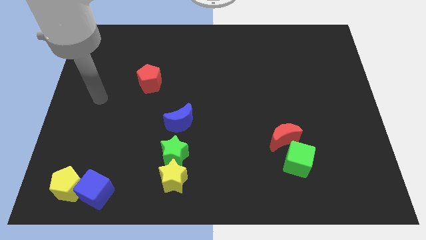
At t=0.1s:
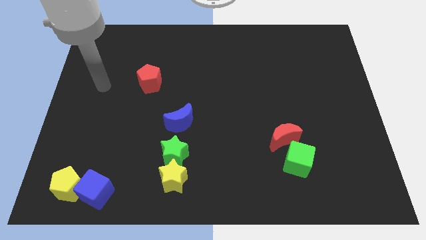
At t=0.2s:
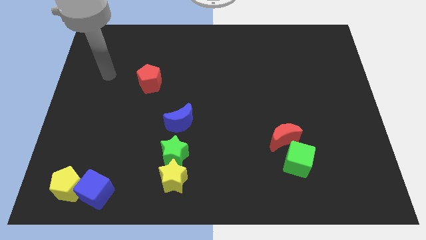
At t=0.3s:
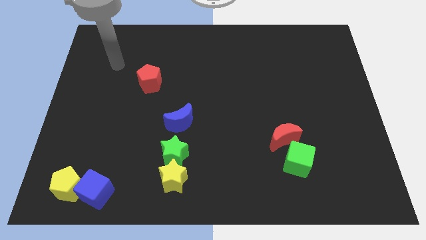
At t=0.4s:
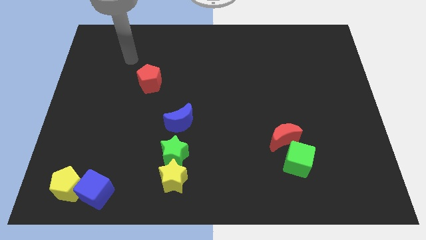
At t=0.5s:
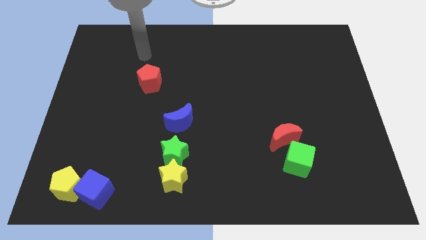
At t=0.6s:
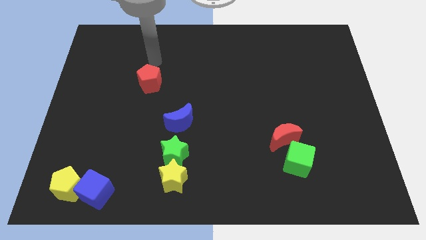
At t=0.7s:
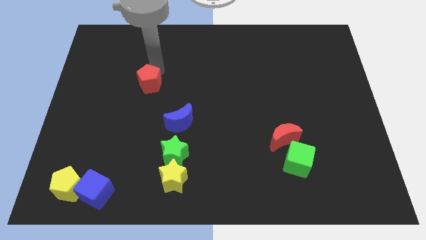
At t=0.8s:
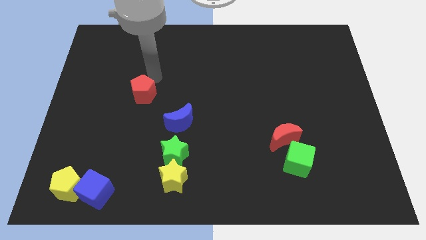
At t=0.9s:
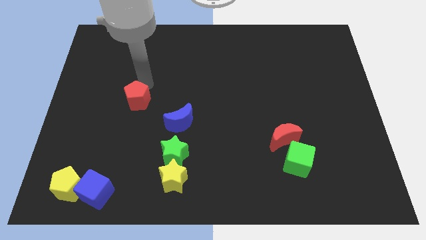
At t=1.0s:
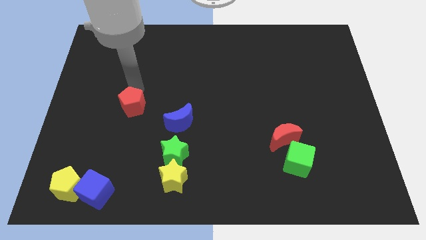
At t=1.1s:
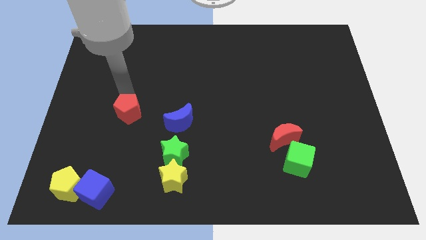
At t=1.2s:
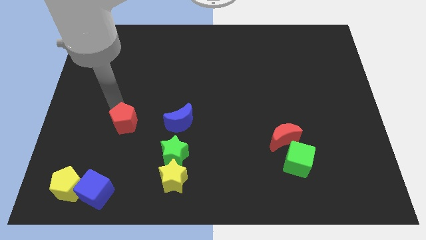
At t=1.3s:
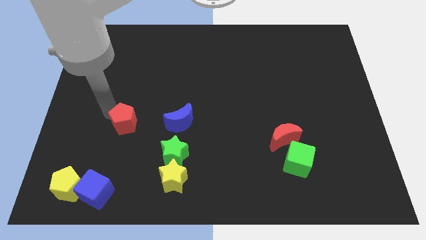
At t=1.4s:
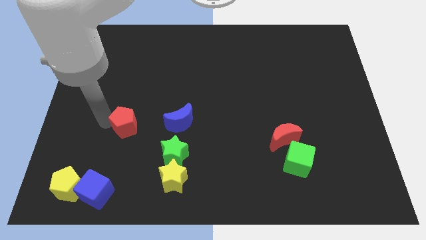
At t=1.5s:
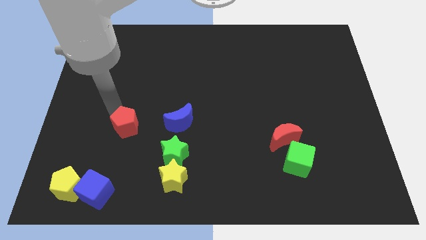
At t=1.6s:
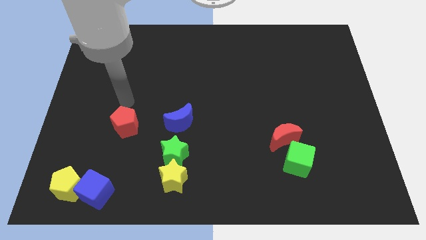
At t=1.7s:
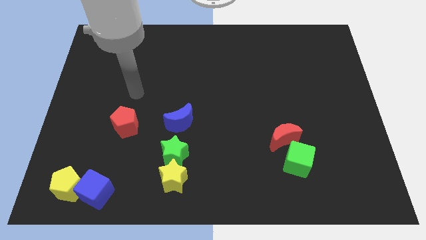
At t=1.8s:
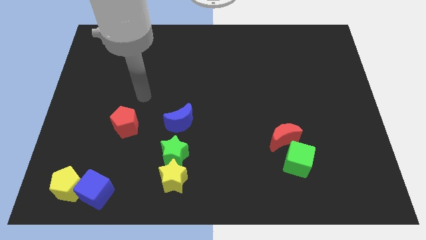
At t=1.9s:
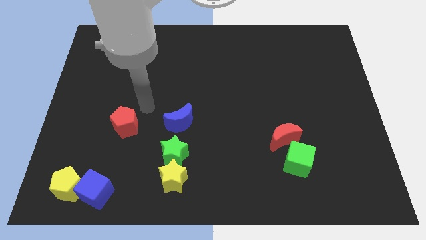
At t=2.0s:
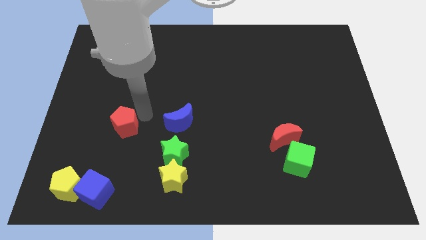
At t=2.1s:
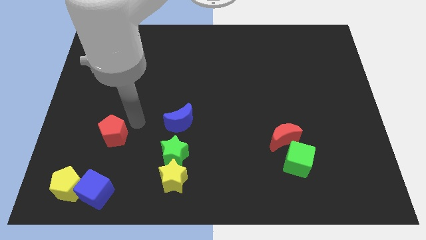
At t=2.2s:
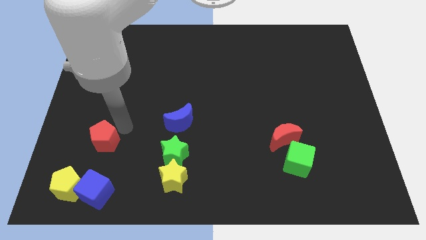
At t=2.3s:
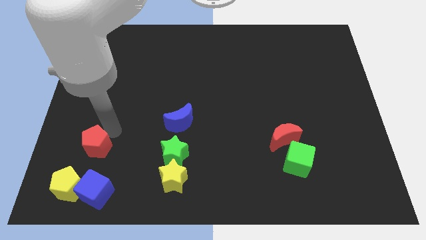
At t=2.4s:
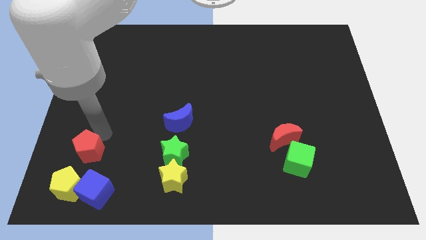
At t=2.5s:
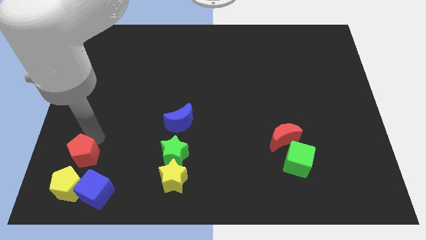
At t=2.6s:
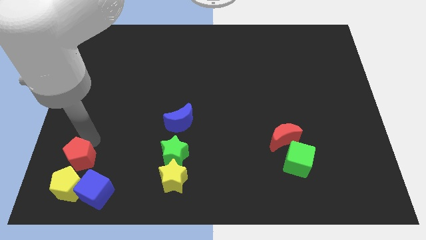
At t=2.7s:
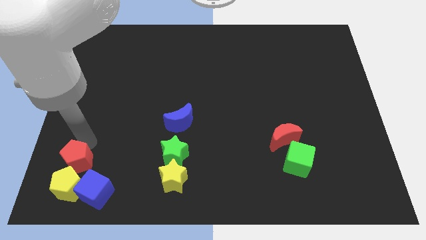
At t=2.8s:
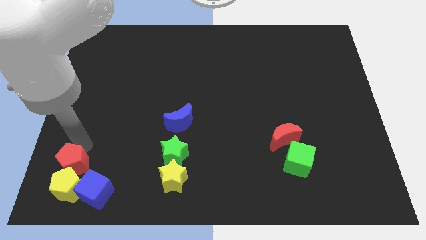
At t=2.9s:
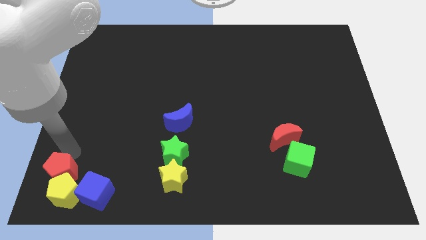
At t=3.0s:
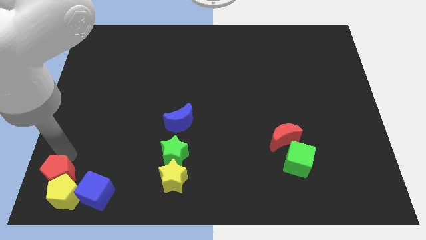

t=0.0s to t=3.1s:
place red pentagon on top of yellow pentagon

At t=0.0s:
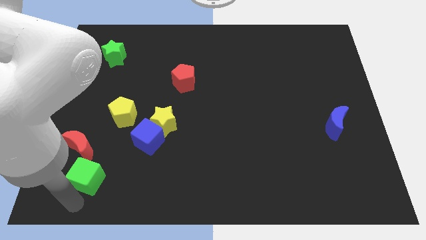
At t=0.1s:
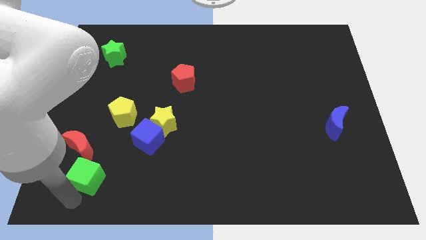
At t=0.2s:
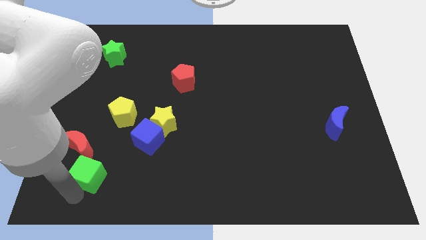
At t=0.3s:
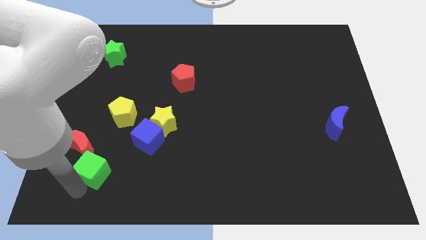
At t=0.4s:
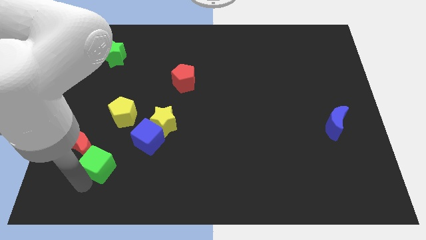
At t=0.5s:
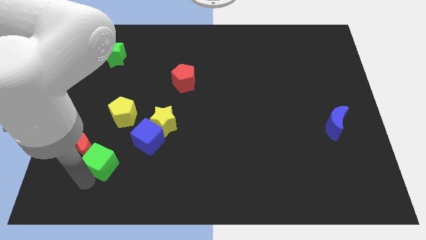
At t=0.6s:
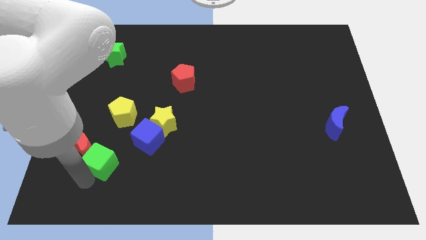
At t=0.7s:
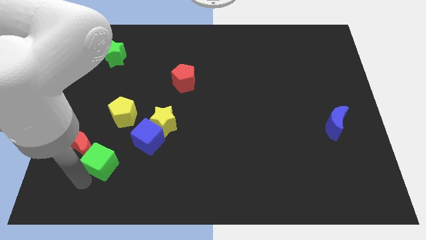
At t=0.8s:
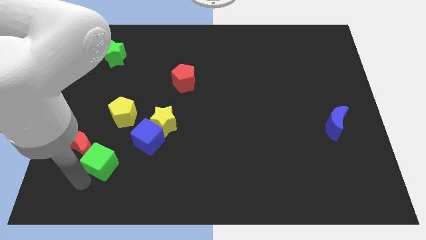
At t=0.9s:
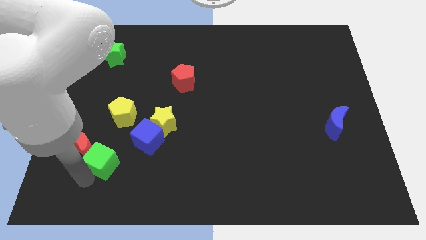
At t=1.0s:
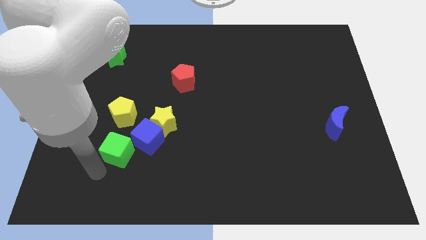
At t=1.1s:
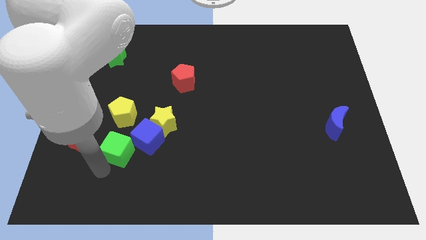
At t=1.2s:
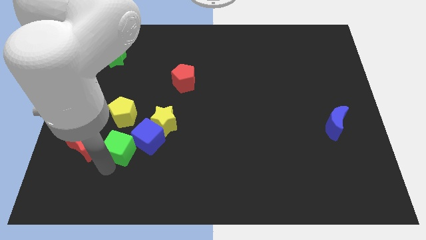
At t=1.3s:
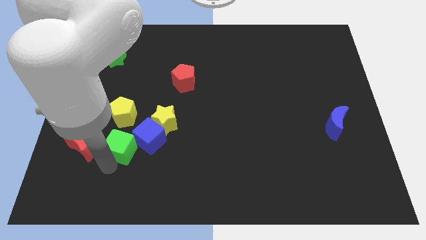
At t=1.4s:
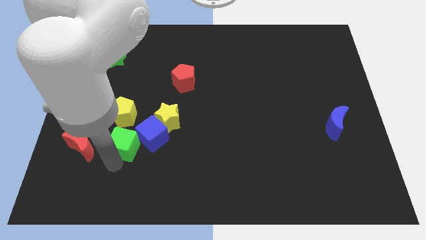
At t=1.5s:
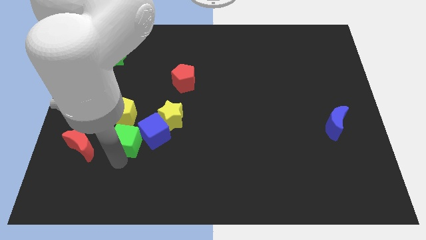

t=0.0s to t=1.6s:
push the green cube into the blue cube

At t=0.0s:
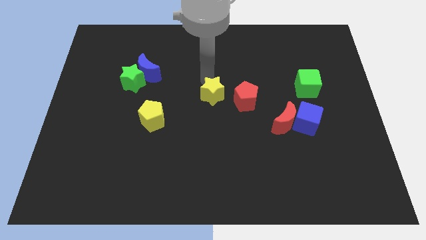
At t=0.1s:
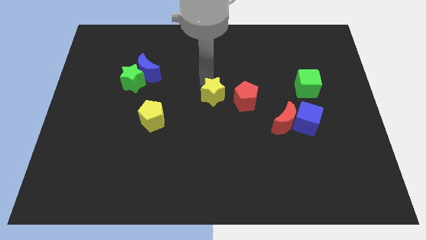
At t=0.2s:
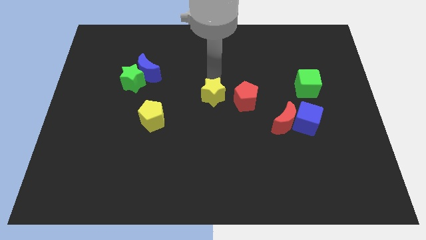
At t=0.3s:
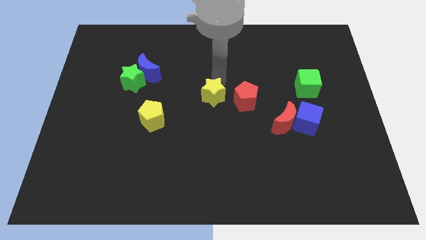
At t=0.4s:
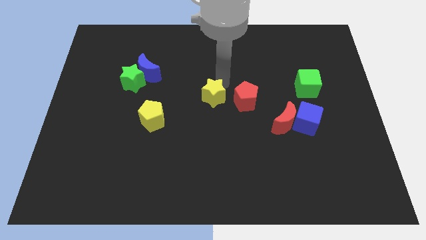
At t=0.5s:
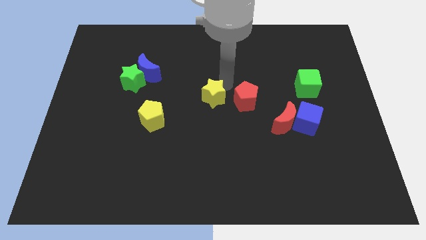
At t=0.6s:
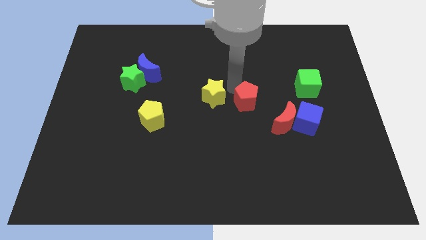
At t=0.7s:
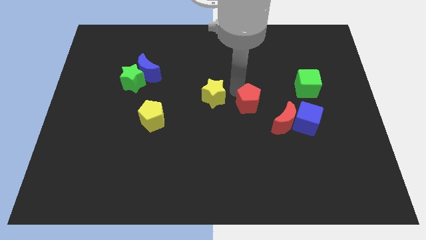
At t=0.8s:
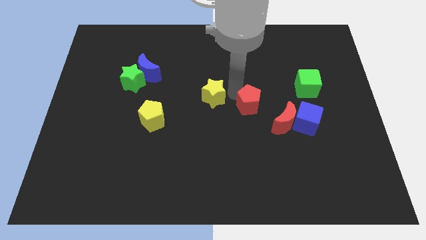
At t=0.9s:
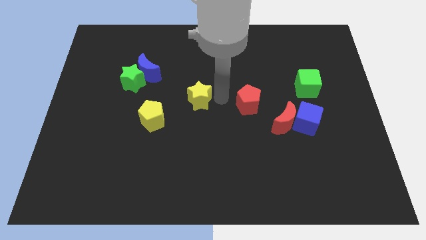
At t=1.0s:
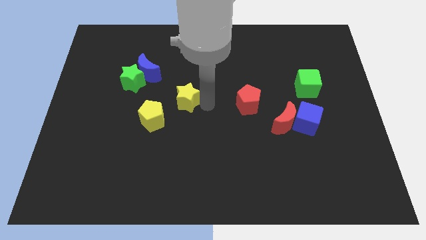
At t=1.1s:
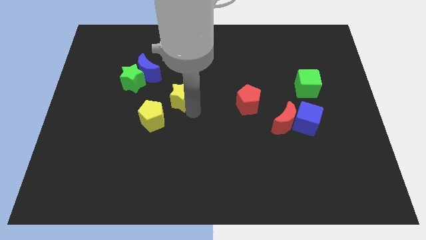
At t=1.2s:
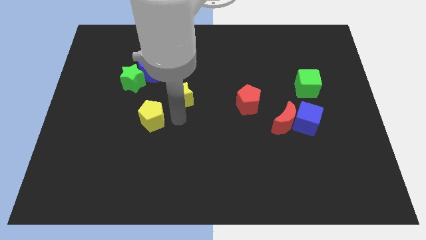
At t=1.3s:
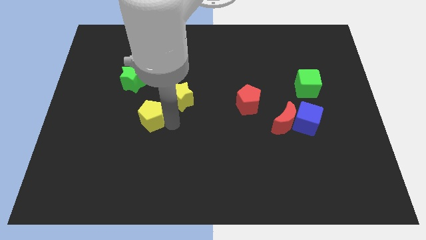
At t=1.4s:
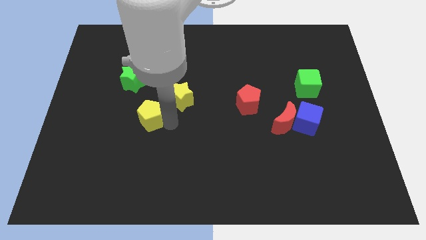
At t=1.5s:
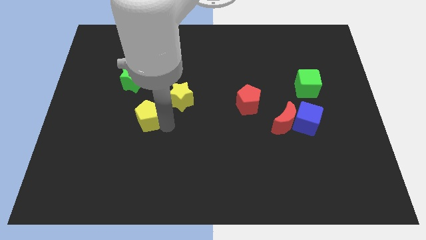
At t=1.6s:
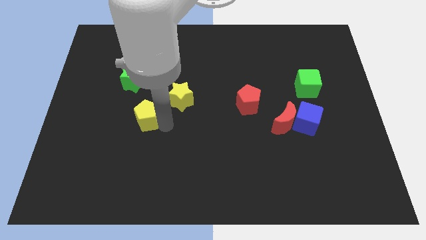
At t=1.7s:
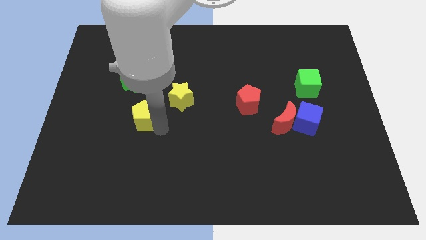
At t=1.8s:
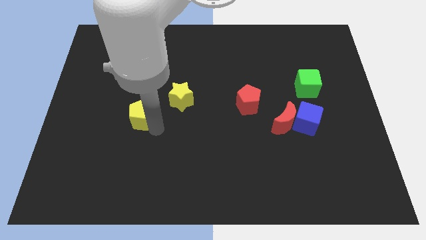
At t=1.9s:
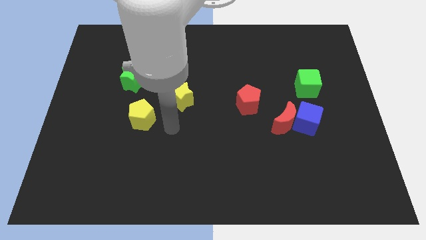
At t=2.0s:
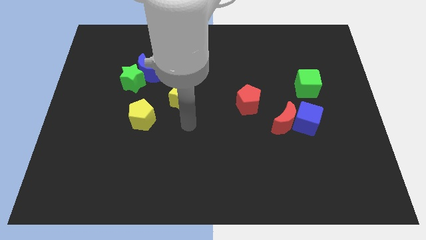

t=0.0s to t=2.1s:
push the yellow star below to the blue crescent

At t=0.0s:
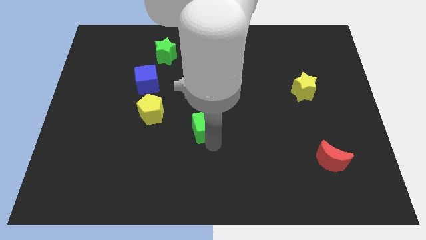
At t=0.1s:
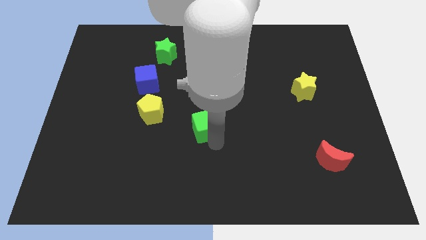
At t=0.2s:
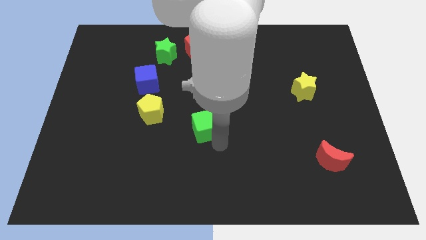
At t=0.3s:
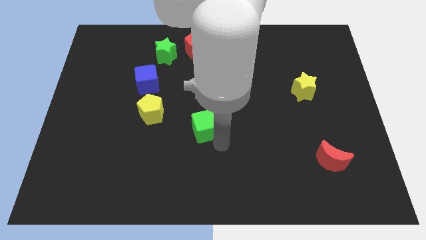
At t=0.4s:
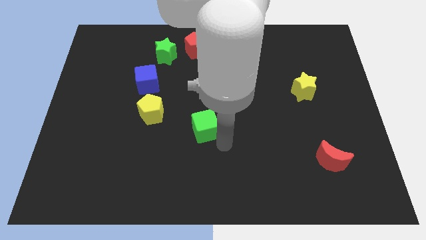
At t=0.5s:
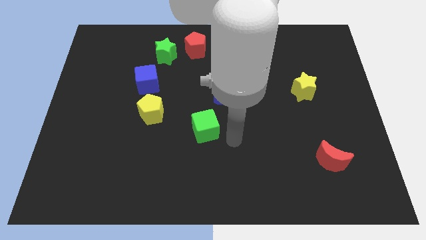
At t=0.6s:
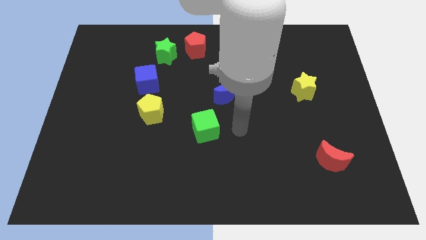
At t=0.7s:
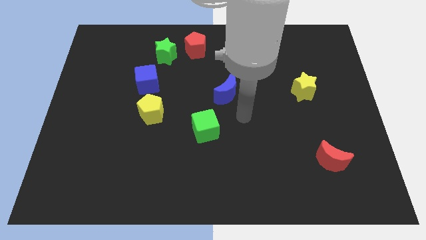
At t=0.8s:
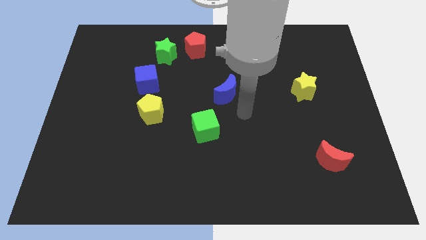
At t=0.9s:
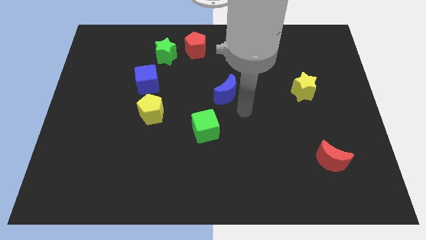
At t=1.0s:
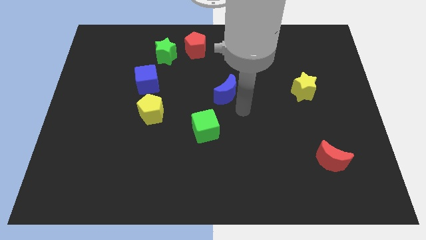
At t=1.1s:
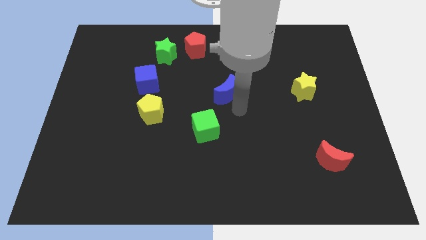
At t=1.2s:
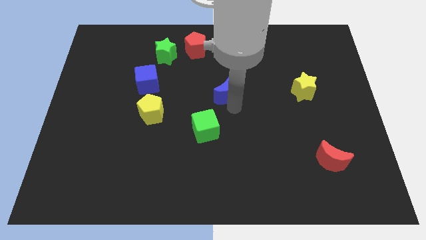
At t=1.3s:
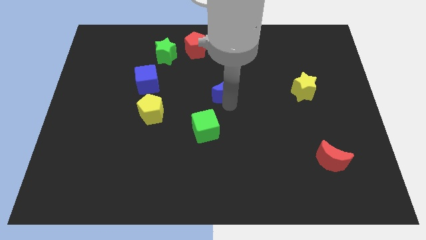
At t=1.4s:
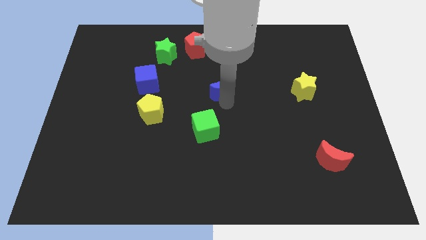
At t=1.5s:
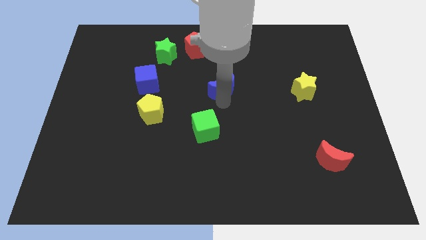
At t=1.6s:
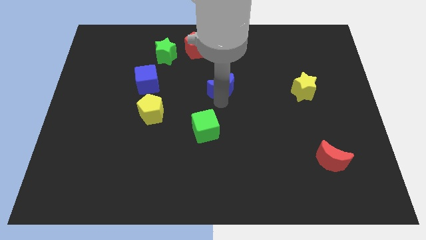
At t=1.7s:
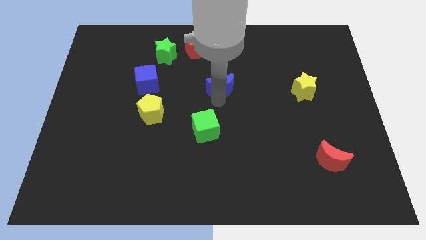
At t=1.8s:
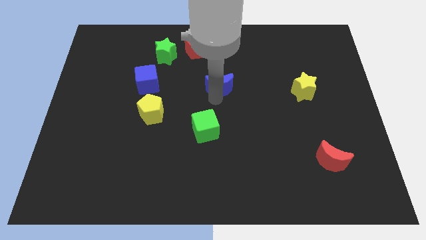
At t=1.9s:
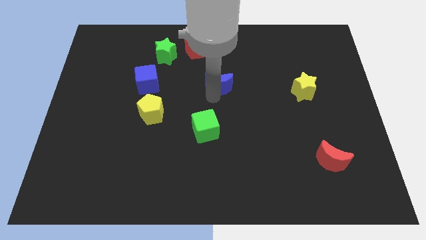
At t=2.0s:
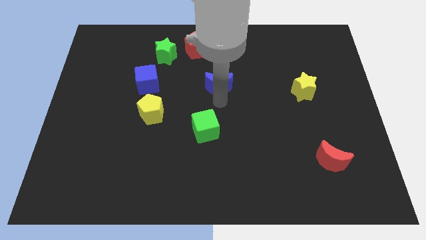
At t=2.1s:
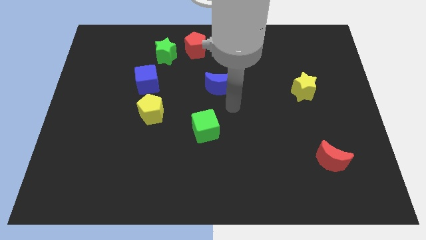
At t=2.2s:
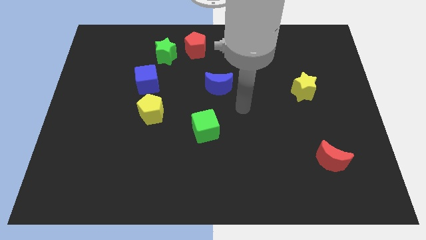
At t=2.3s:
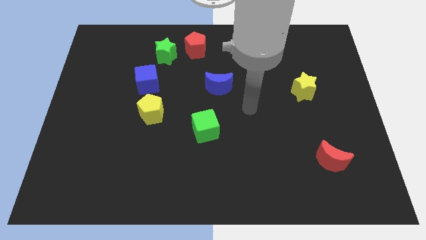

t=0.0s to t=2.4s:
slightly move the blue moon towards up
